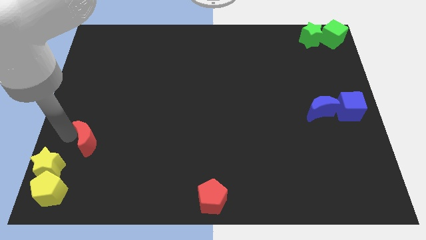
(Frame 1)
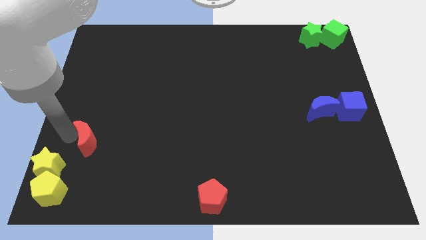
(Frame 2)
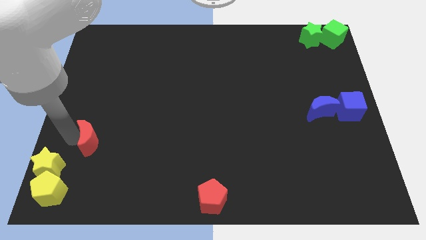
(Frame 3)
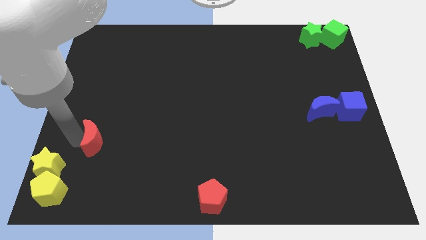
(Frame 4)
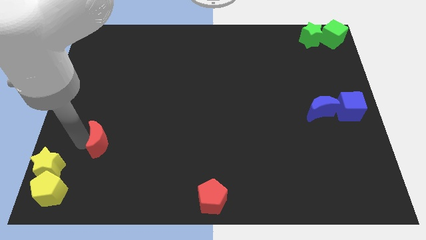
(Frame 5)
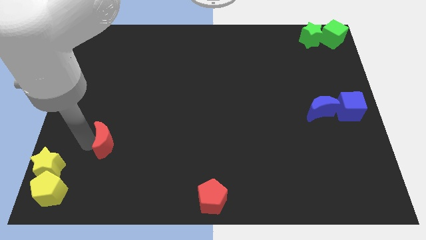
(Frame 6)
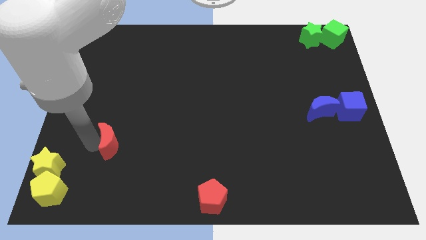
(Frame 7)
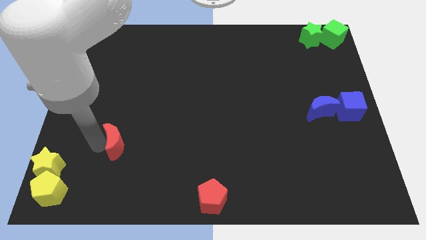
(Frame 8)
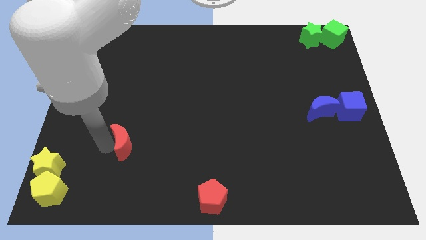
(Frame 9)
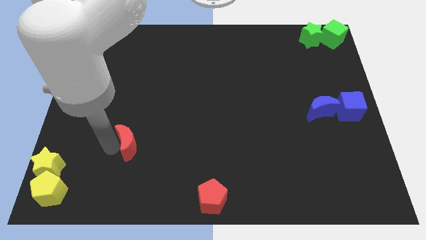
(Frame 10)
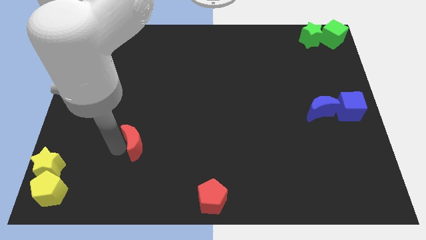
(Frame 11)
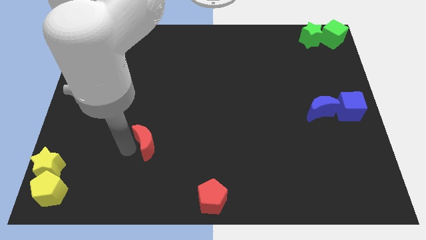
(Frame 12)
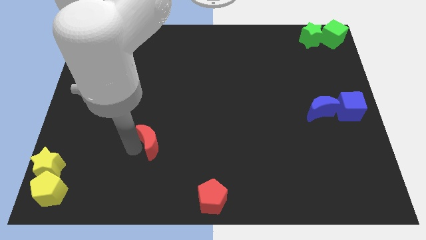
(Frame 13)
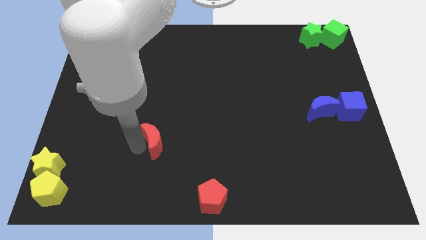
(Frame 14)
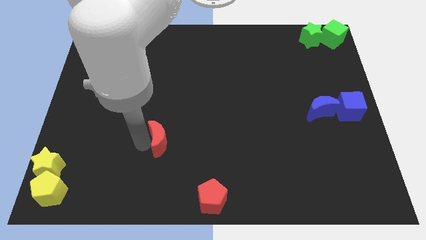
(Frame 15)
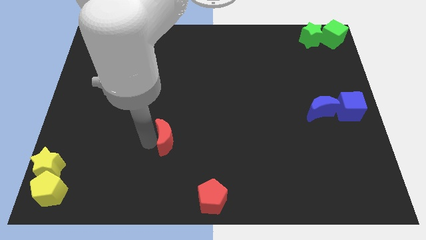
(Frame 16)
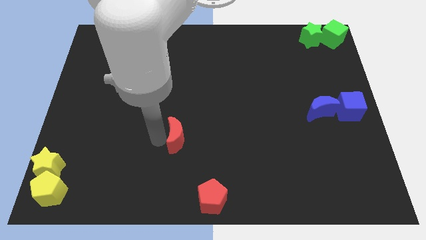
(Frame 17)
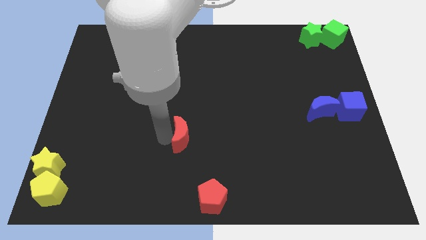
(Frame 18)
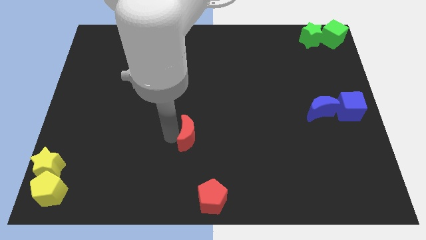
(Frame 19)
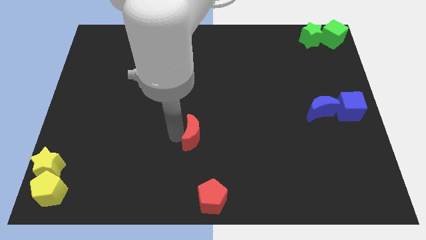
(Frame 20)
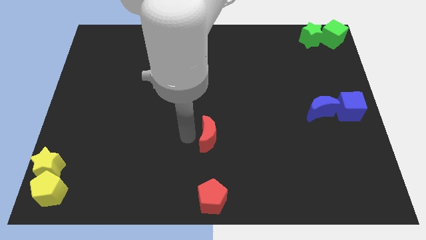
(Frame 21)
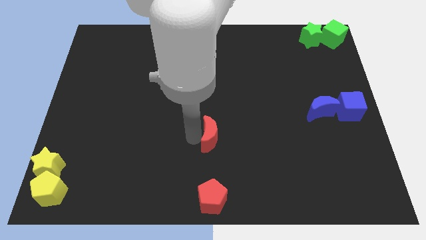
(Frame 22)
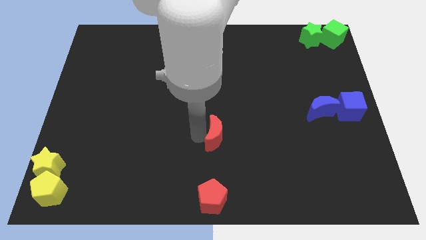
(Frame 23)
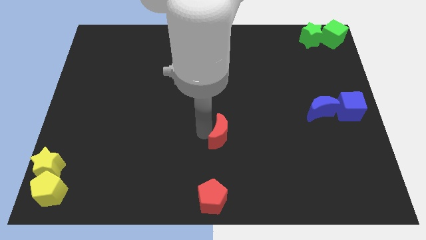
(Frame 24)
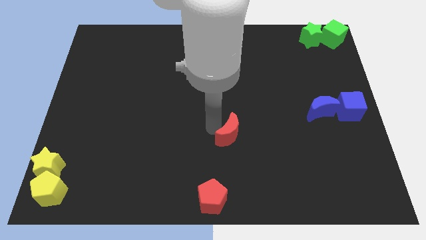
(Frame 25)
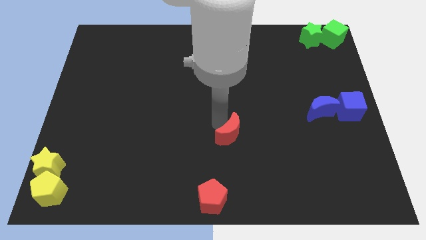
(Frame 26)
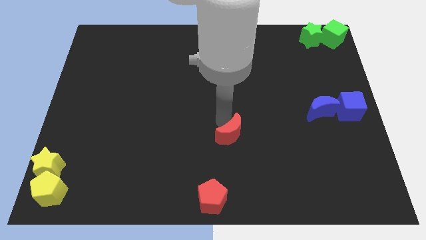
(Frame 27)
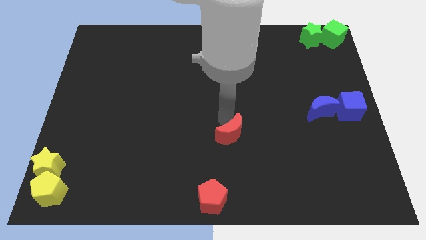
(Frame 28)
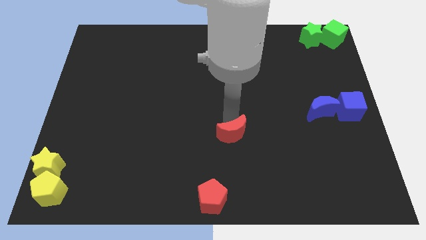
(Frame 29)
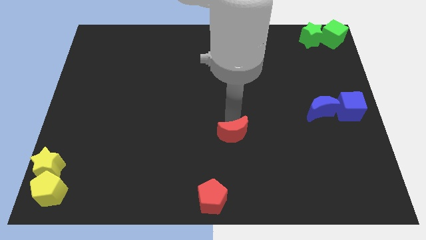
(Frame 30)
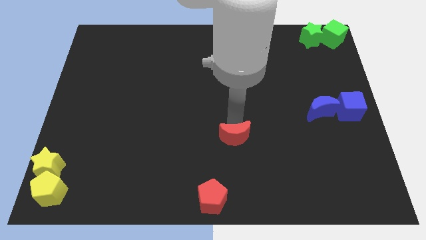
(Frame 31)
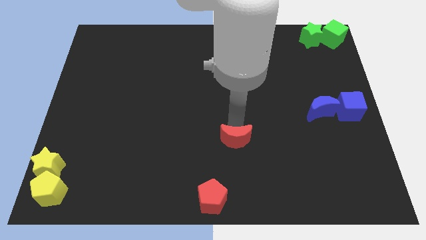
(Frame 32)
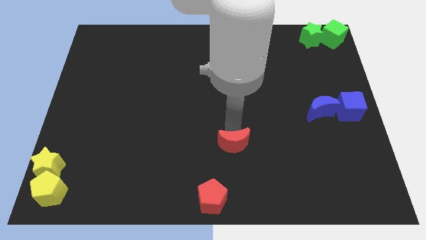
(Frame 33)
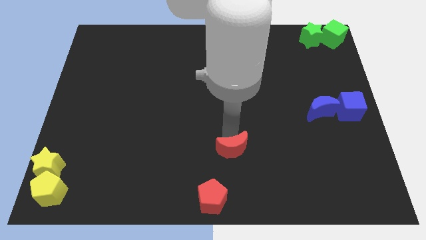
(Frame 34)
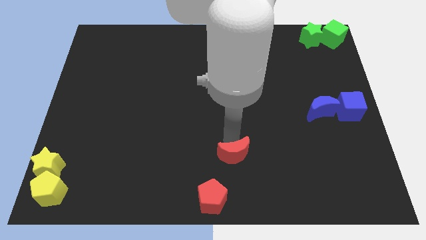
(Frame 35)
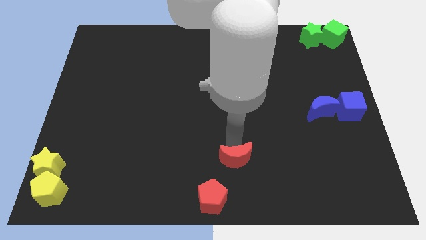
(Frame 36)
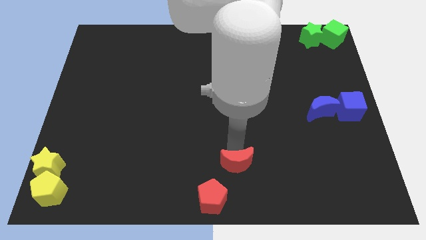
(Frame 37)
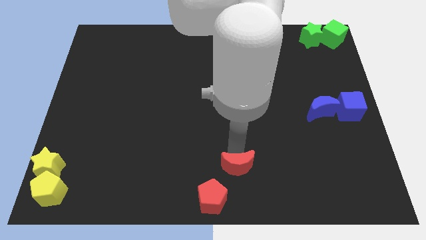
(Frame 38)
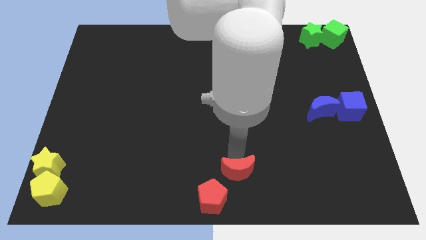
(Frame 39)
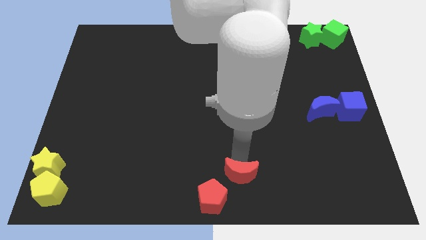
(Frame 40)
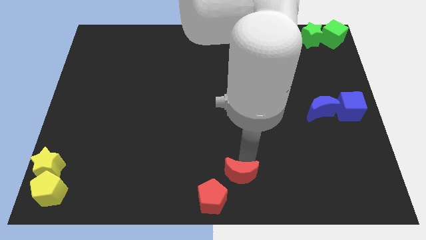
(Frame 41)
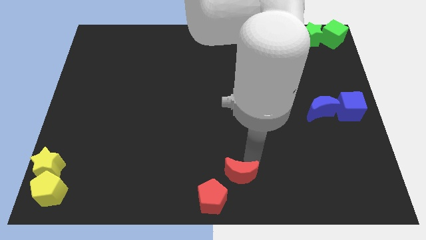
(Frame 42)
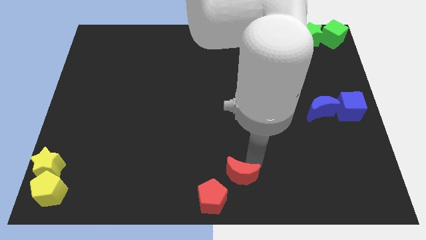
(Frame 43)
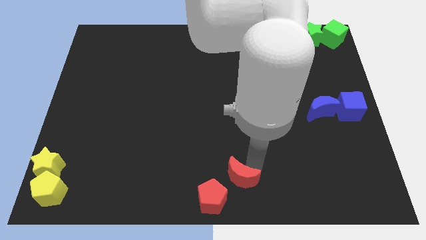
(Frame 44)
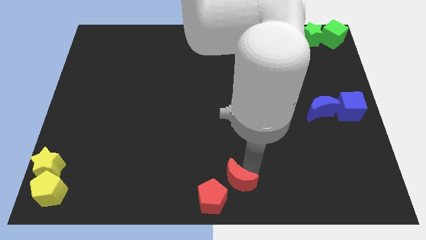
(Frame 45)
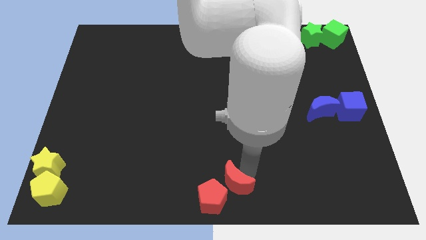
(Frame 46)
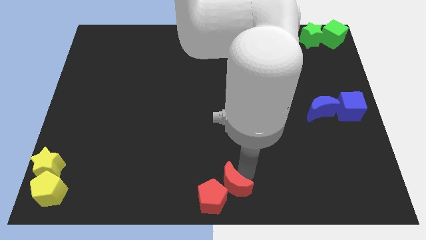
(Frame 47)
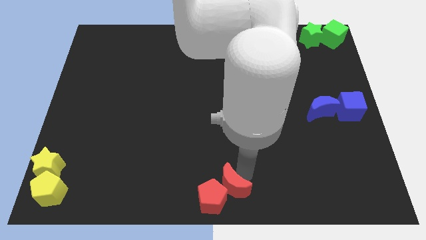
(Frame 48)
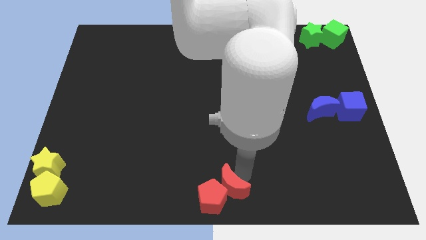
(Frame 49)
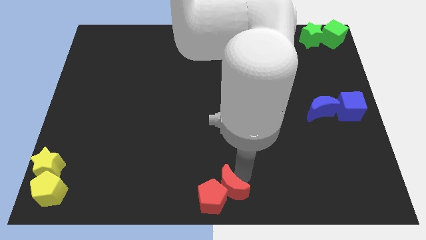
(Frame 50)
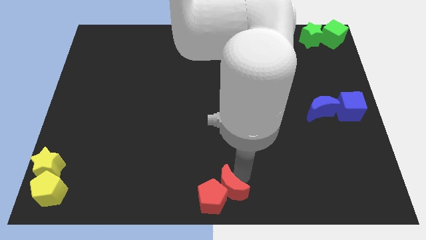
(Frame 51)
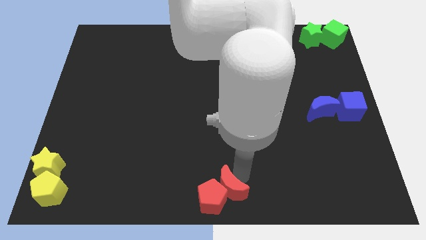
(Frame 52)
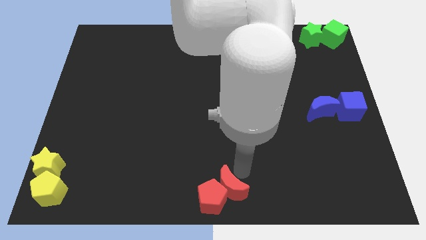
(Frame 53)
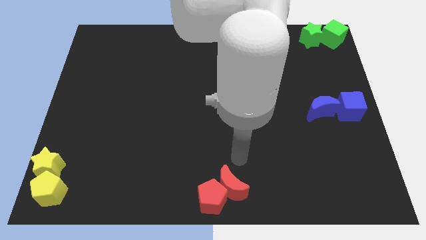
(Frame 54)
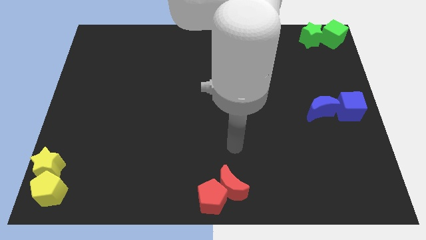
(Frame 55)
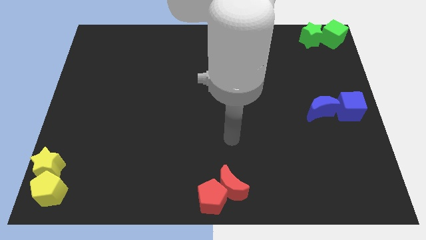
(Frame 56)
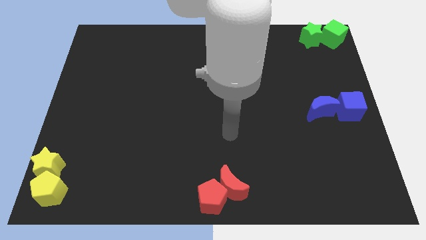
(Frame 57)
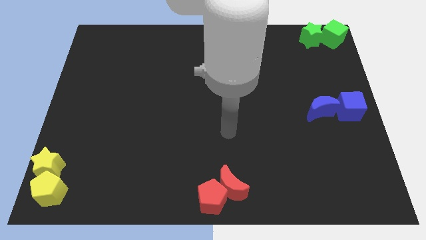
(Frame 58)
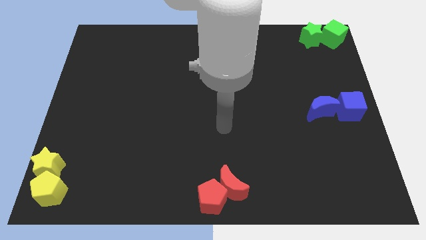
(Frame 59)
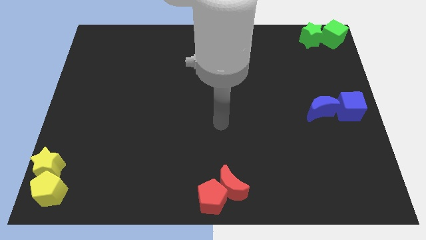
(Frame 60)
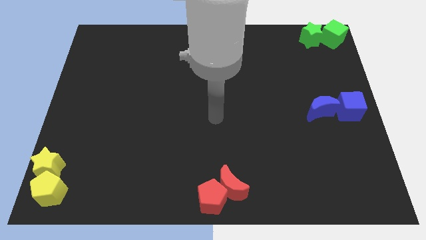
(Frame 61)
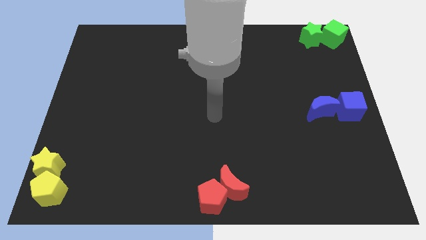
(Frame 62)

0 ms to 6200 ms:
move red crescent into the red pentagon

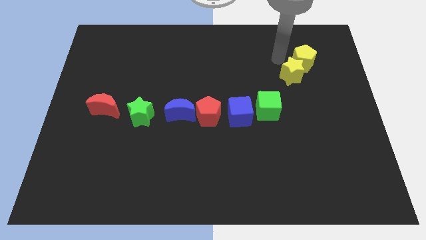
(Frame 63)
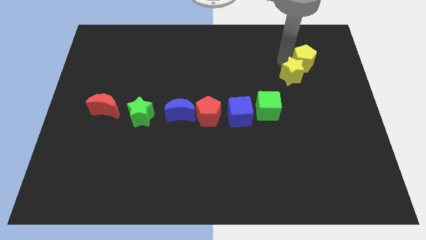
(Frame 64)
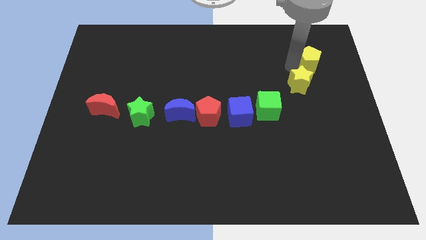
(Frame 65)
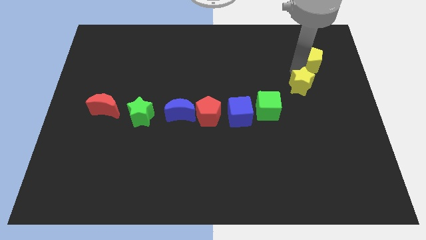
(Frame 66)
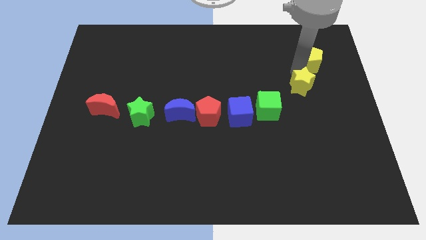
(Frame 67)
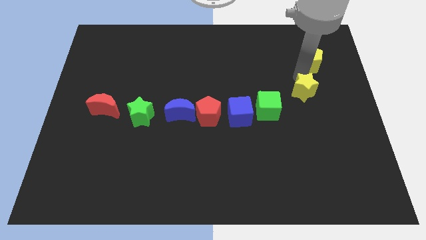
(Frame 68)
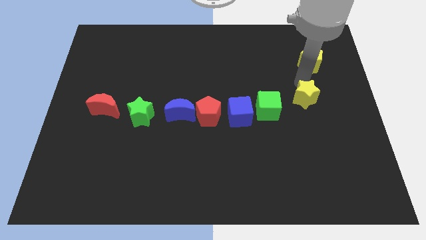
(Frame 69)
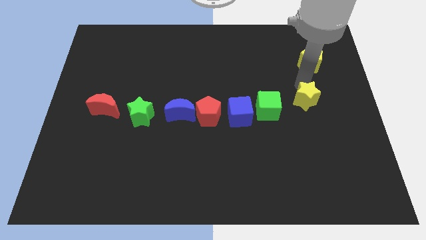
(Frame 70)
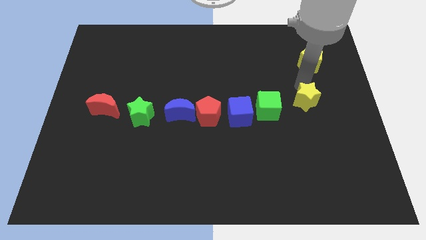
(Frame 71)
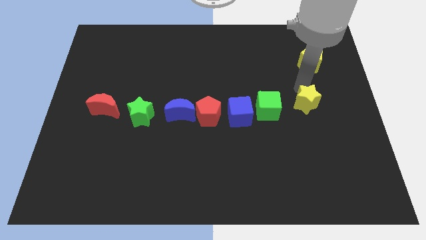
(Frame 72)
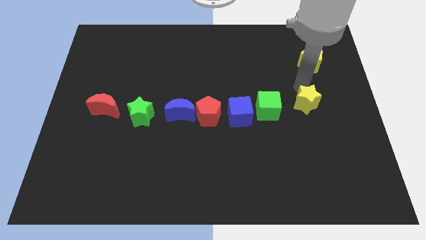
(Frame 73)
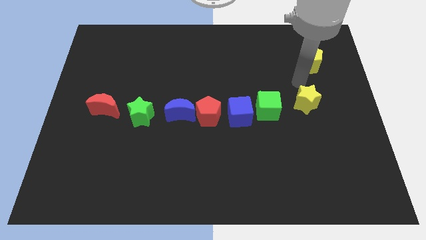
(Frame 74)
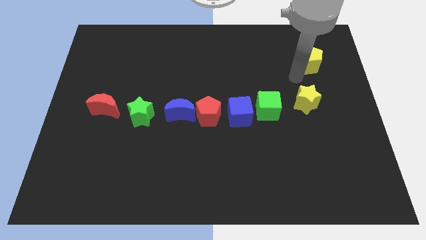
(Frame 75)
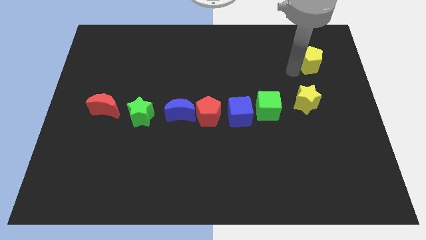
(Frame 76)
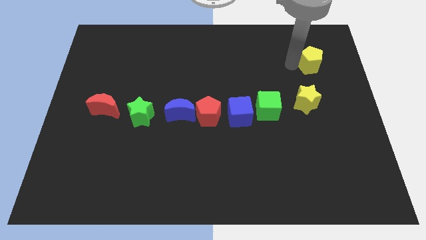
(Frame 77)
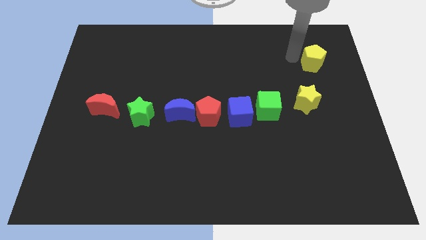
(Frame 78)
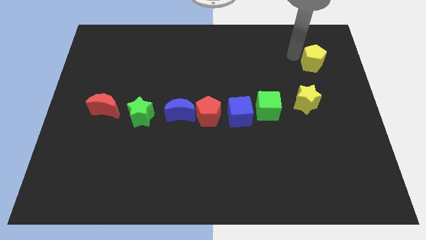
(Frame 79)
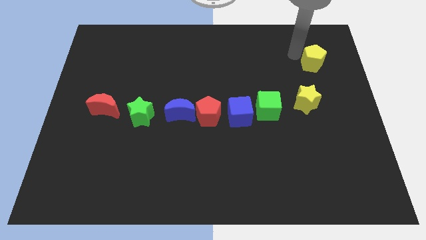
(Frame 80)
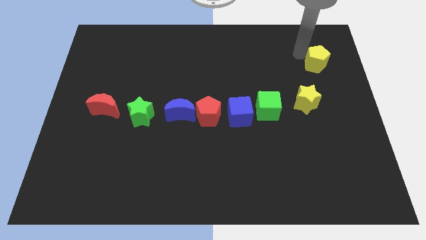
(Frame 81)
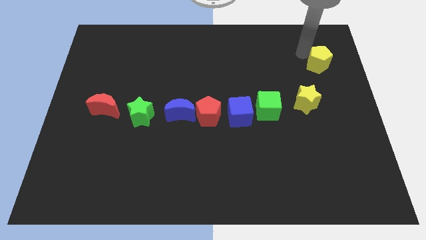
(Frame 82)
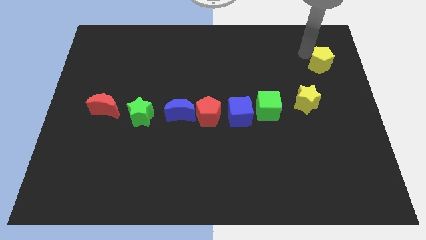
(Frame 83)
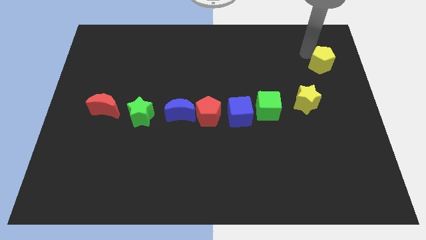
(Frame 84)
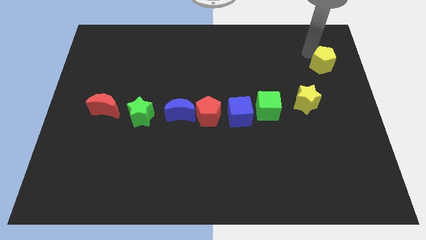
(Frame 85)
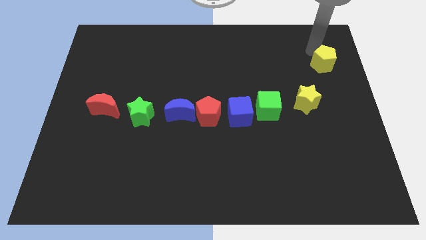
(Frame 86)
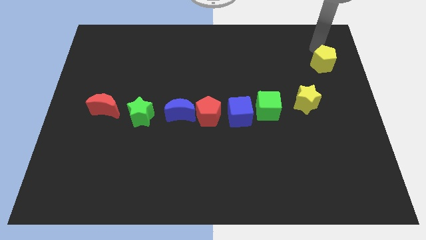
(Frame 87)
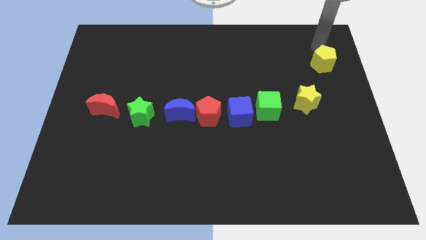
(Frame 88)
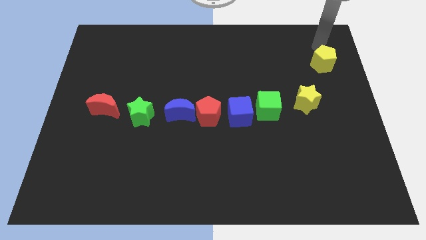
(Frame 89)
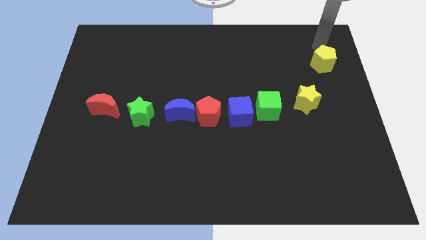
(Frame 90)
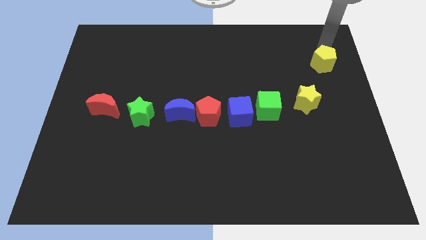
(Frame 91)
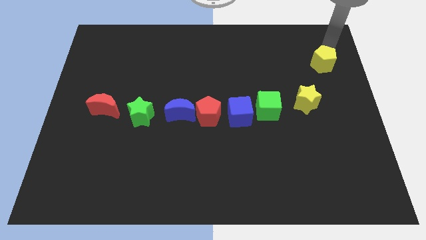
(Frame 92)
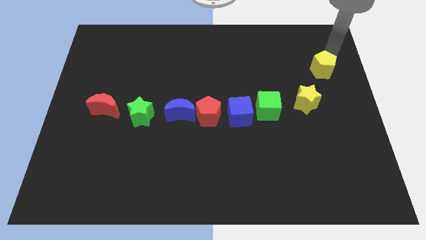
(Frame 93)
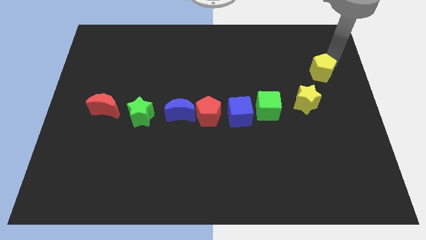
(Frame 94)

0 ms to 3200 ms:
put both the yellow blocks diagonal to each other
